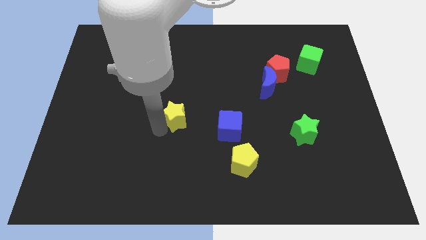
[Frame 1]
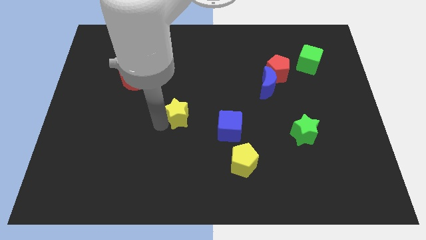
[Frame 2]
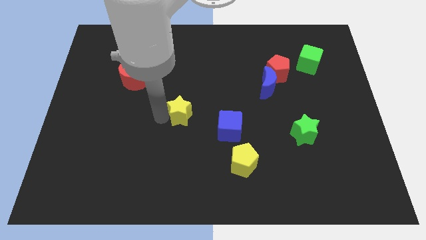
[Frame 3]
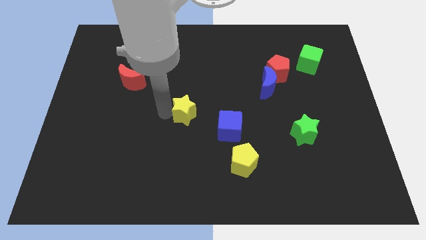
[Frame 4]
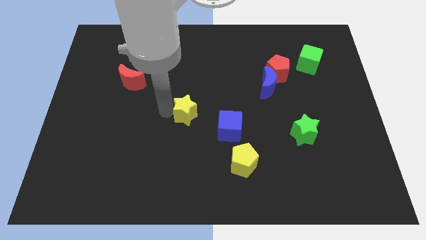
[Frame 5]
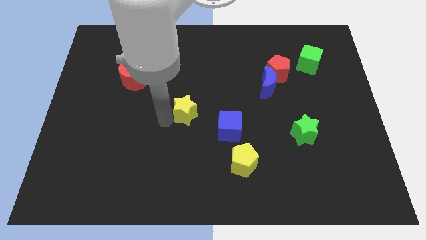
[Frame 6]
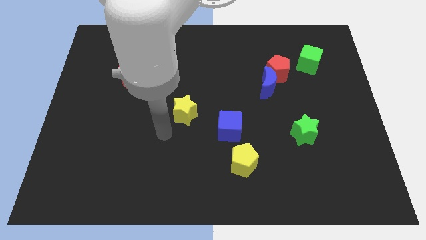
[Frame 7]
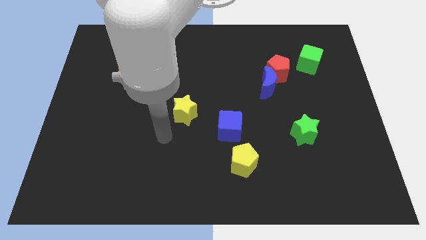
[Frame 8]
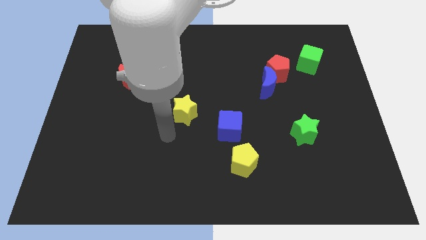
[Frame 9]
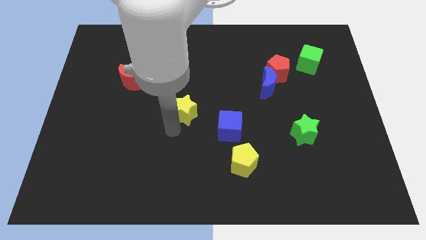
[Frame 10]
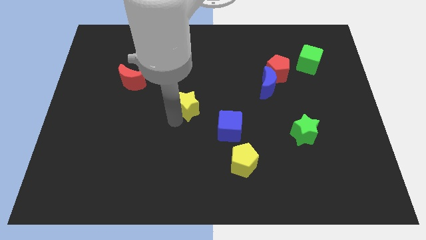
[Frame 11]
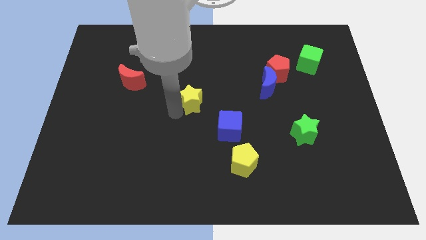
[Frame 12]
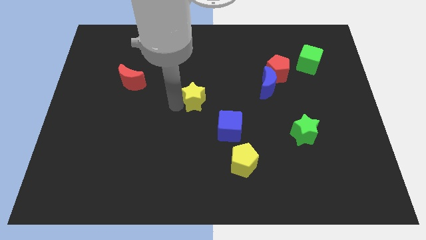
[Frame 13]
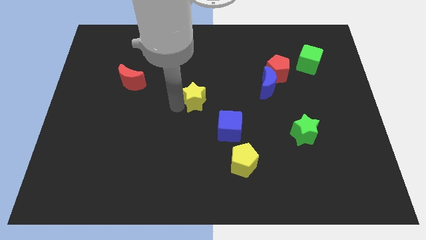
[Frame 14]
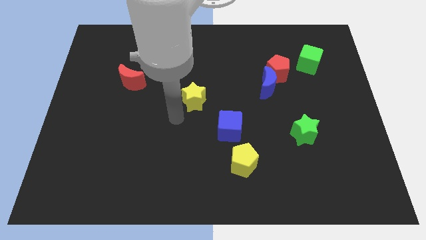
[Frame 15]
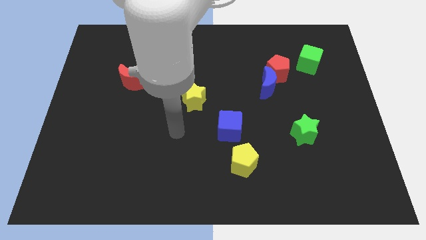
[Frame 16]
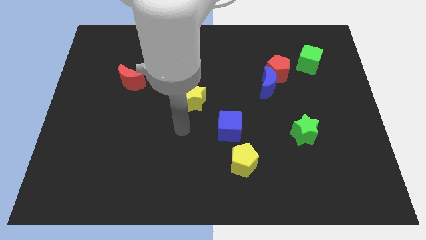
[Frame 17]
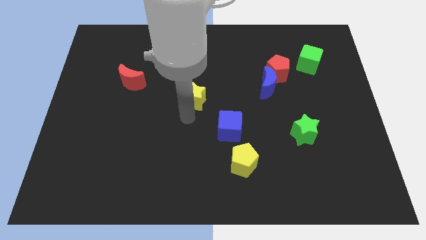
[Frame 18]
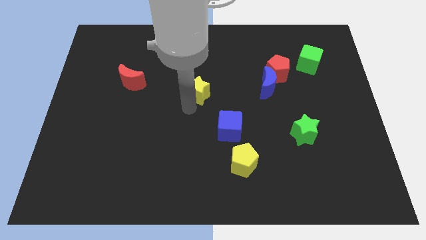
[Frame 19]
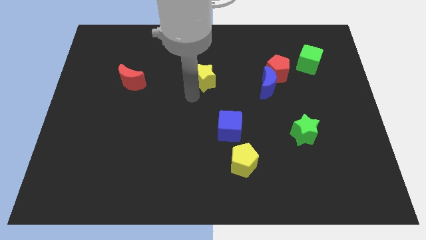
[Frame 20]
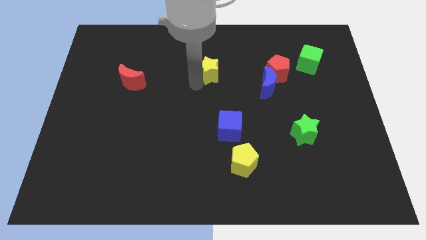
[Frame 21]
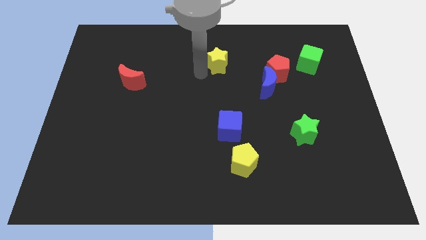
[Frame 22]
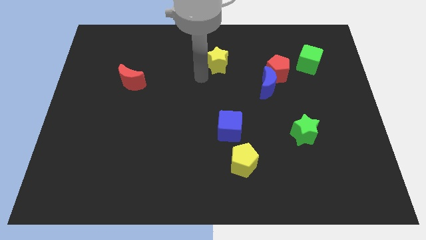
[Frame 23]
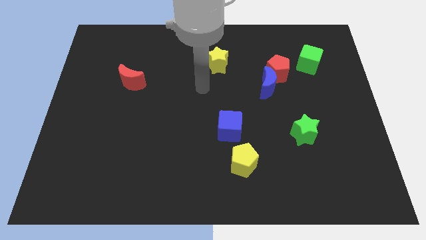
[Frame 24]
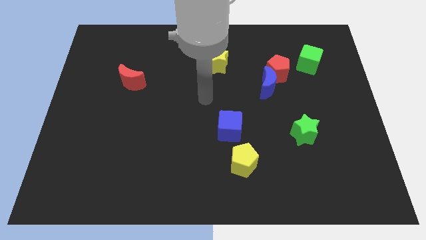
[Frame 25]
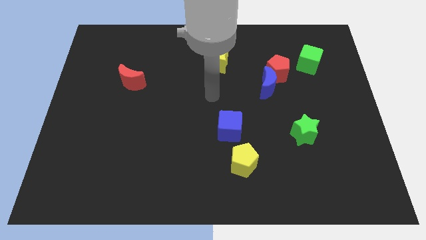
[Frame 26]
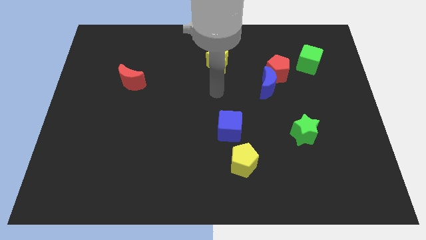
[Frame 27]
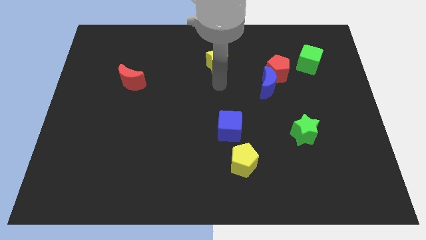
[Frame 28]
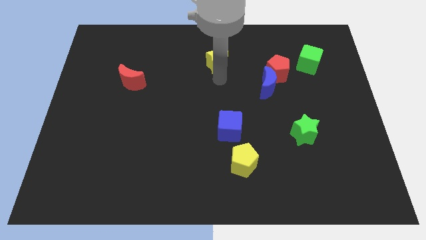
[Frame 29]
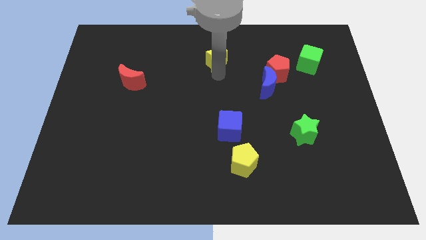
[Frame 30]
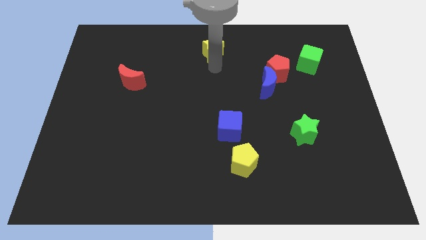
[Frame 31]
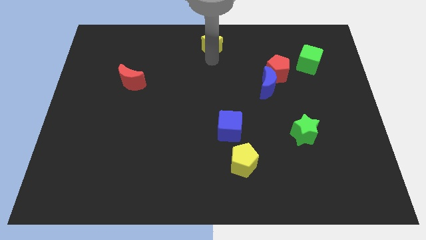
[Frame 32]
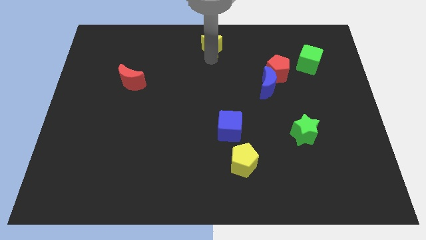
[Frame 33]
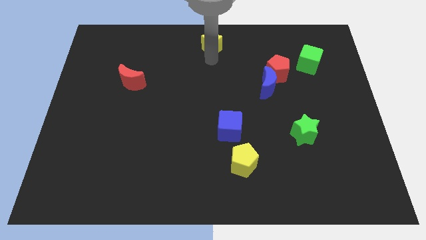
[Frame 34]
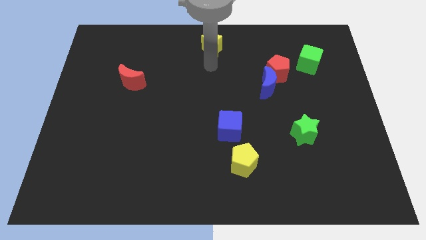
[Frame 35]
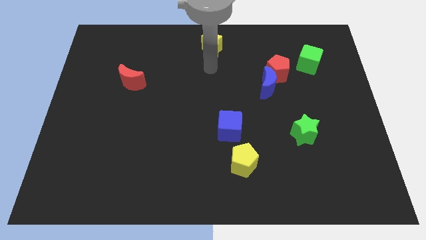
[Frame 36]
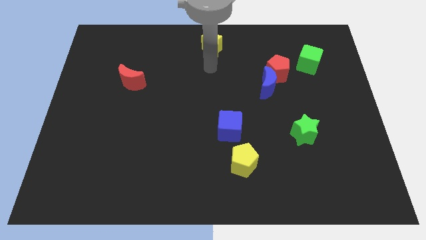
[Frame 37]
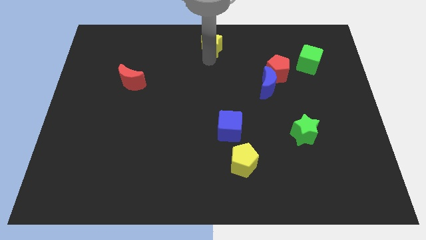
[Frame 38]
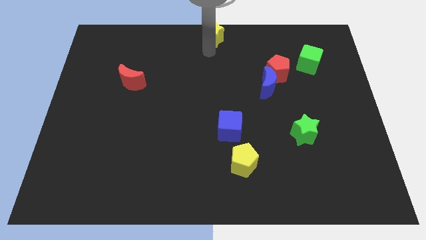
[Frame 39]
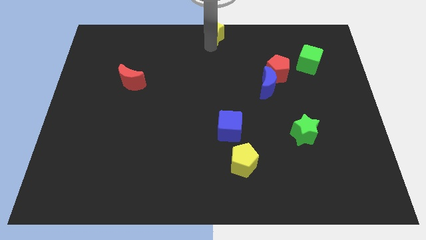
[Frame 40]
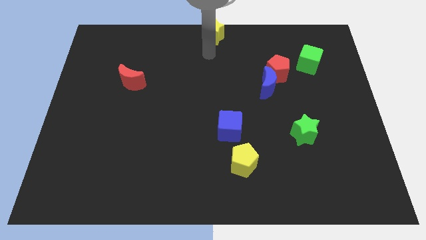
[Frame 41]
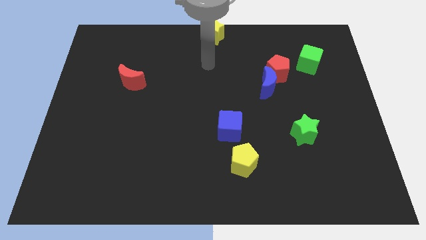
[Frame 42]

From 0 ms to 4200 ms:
push the yellow star to the top center of the board

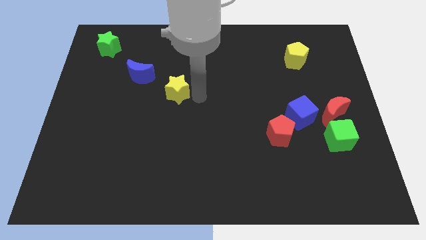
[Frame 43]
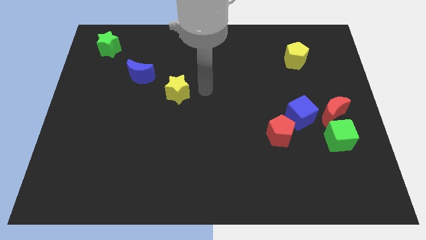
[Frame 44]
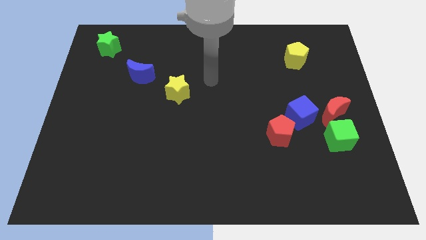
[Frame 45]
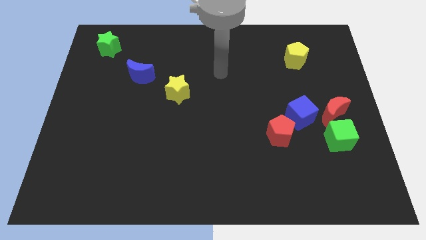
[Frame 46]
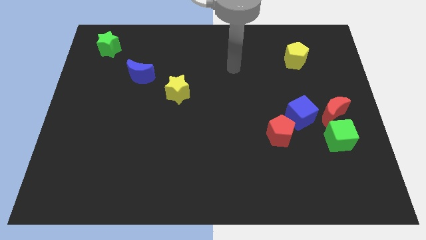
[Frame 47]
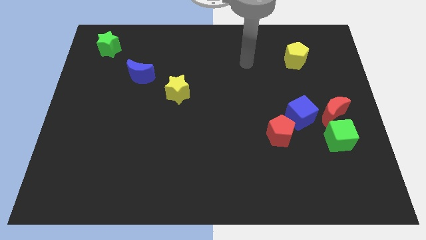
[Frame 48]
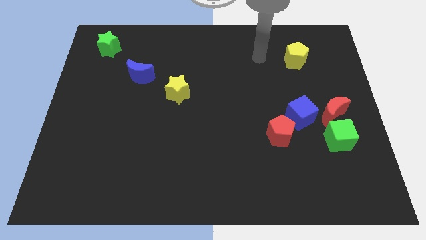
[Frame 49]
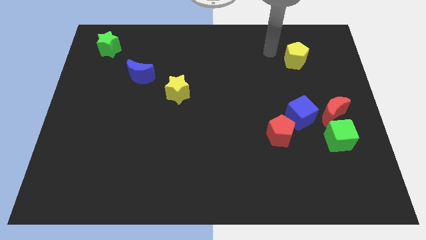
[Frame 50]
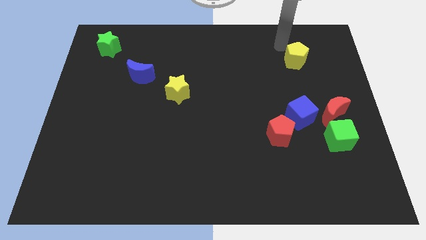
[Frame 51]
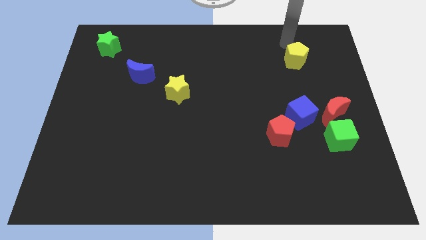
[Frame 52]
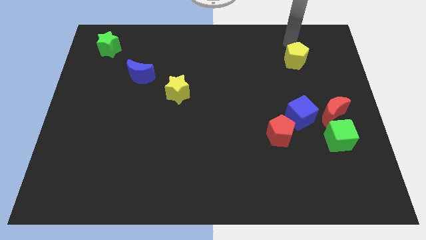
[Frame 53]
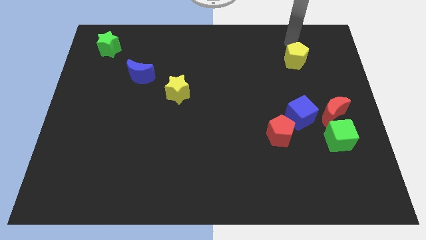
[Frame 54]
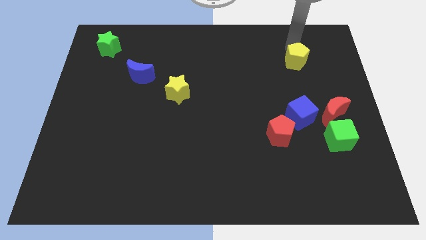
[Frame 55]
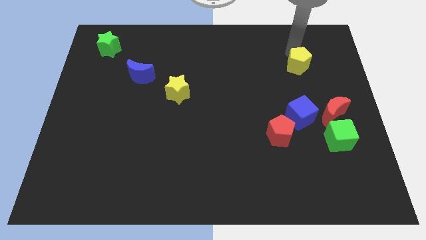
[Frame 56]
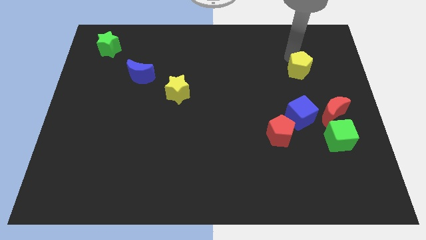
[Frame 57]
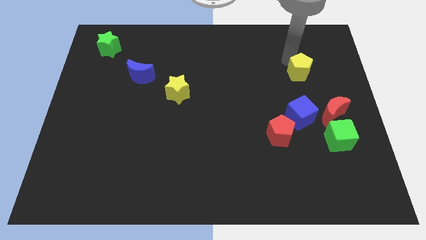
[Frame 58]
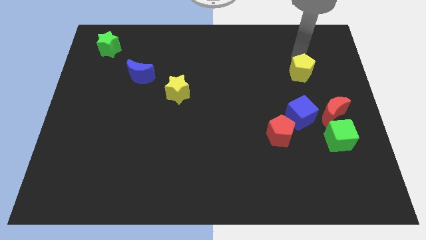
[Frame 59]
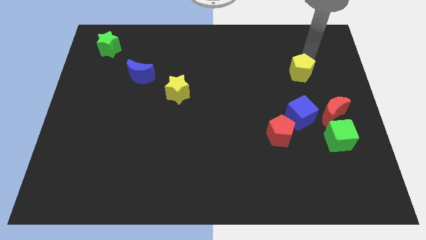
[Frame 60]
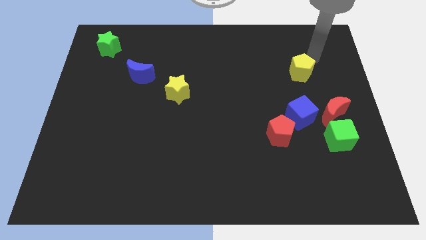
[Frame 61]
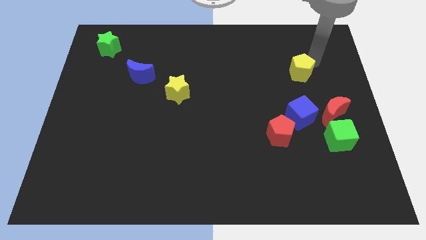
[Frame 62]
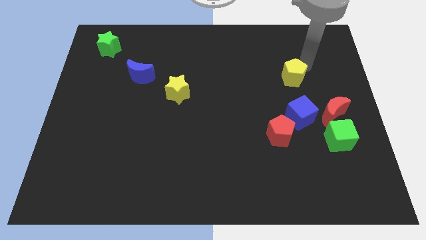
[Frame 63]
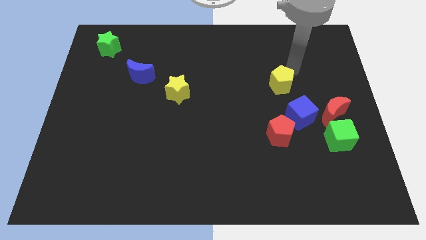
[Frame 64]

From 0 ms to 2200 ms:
slightly push the yellow pentagon on top of the blue cube

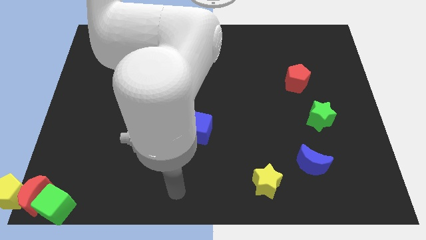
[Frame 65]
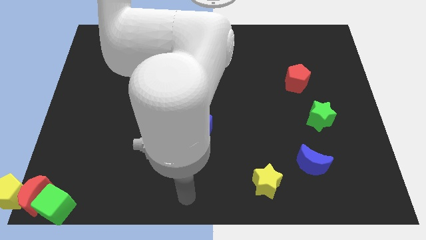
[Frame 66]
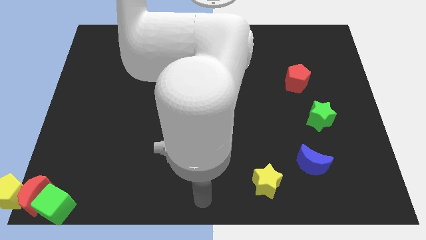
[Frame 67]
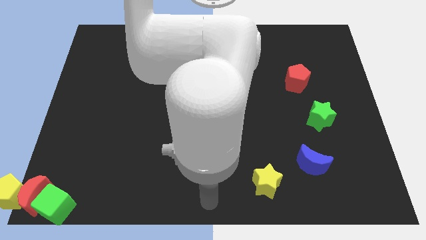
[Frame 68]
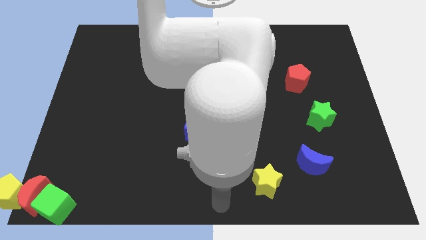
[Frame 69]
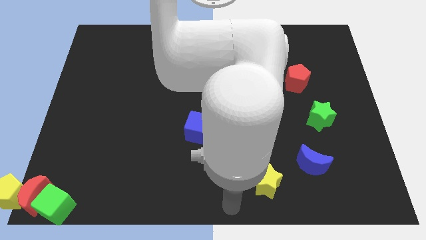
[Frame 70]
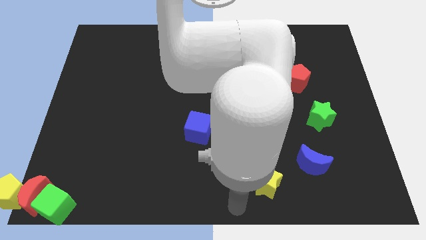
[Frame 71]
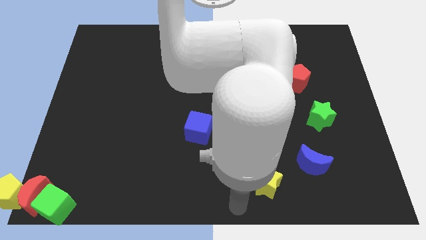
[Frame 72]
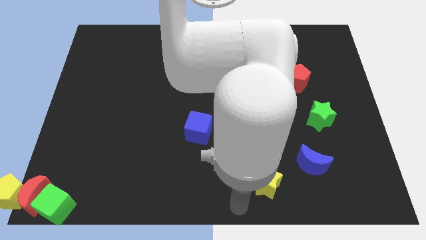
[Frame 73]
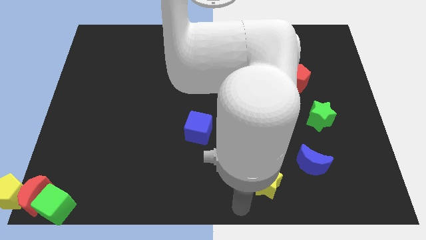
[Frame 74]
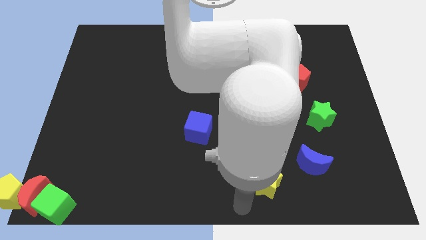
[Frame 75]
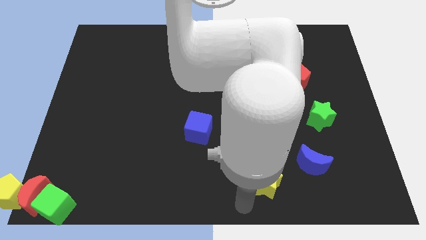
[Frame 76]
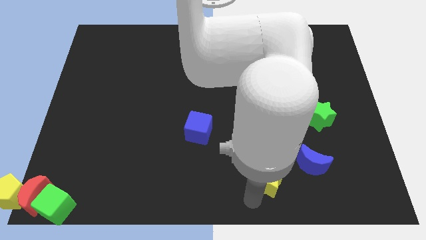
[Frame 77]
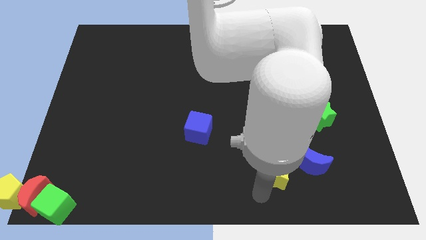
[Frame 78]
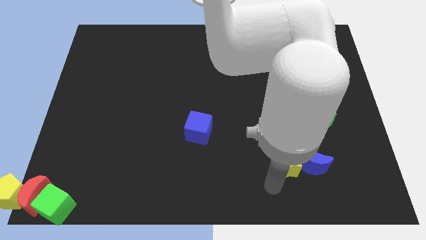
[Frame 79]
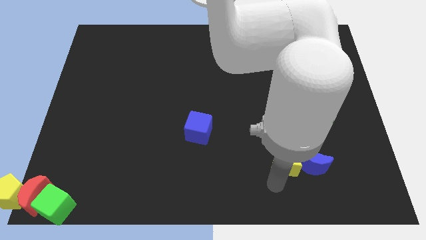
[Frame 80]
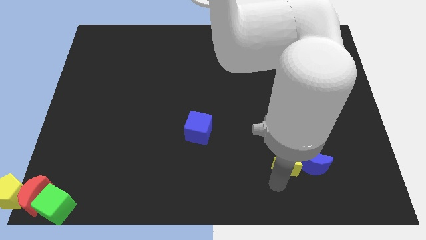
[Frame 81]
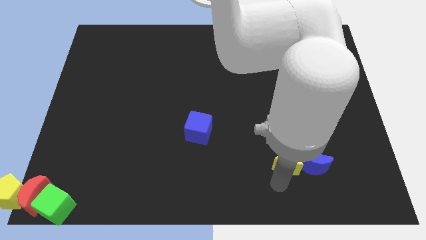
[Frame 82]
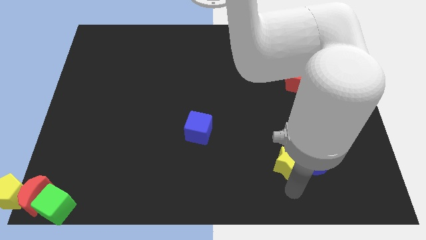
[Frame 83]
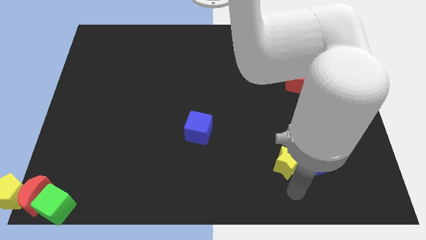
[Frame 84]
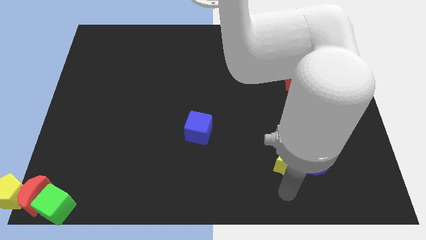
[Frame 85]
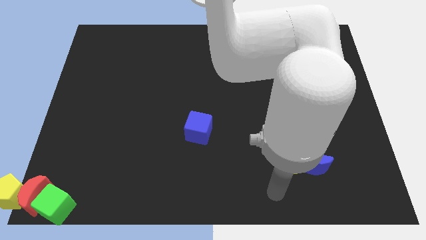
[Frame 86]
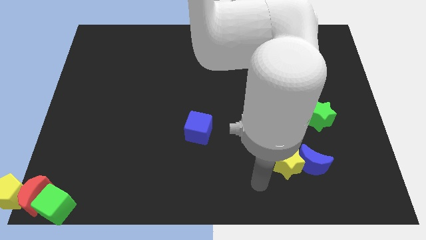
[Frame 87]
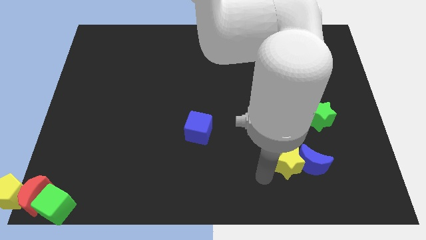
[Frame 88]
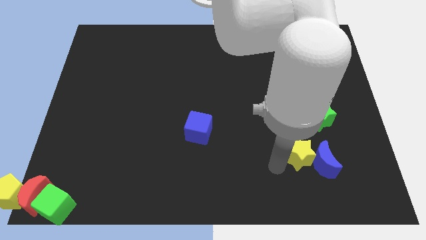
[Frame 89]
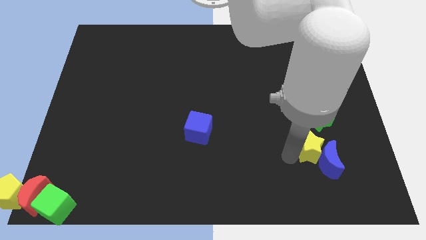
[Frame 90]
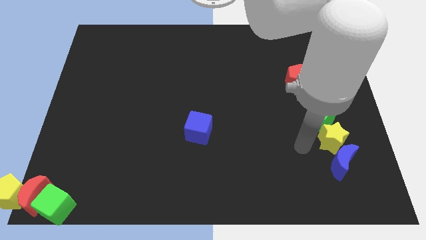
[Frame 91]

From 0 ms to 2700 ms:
move the yellow star to the bottom left of the green star
